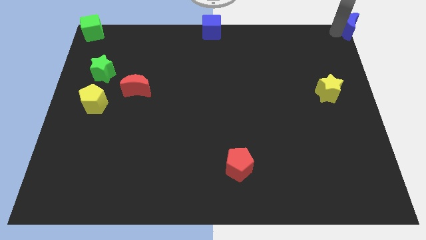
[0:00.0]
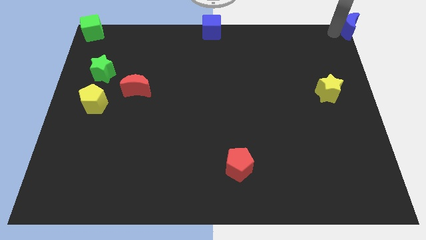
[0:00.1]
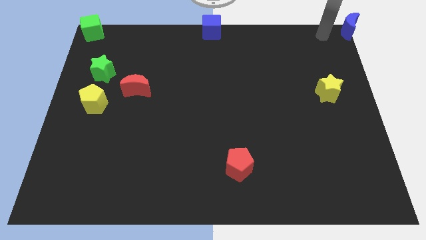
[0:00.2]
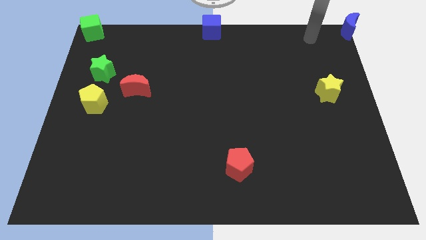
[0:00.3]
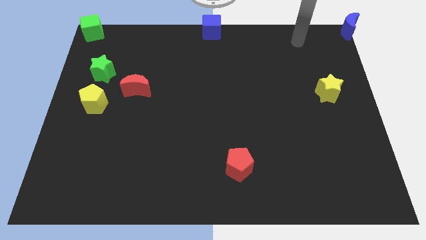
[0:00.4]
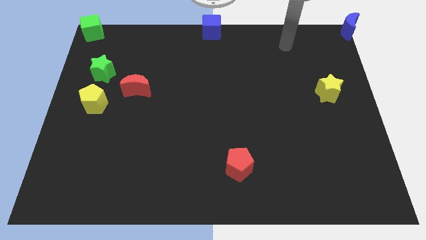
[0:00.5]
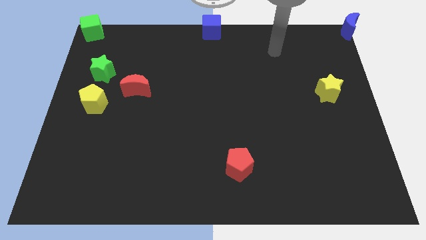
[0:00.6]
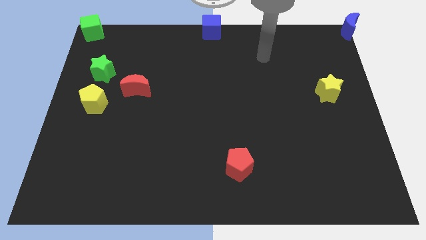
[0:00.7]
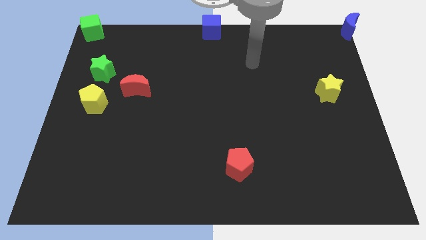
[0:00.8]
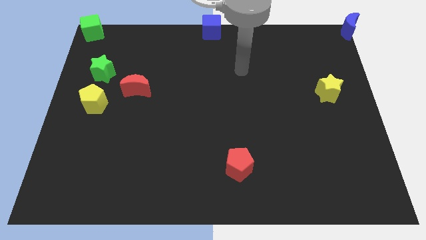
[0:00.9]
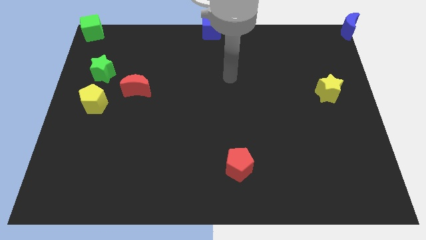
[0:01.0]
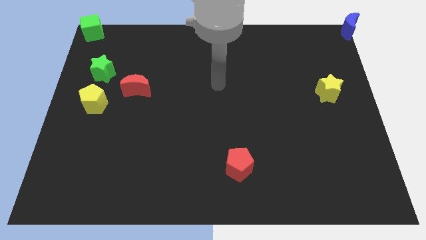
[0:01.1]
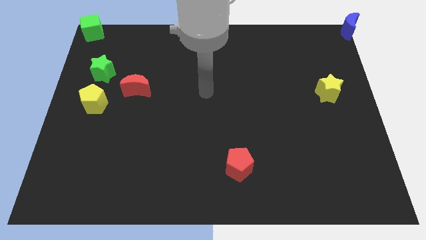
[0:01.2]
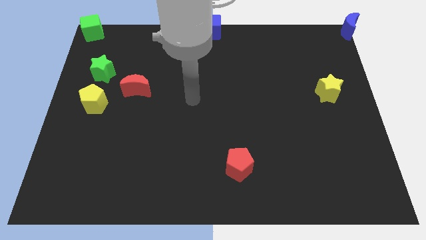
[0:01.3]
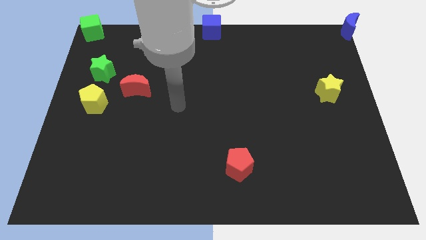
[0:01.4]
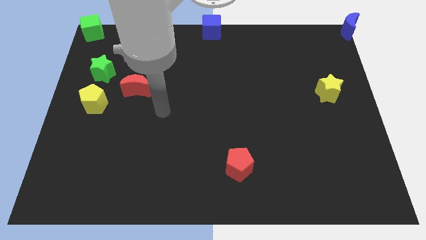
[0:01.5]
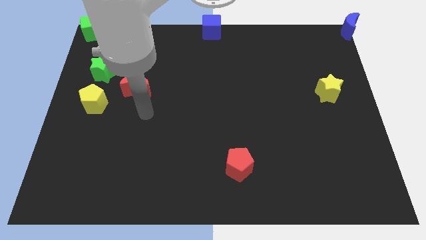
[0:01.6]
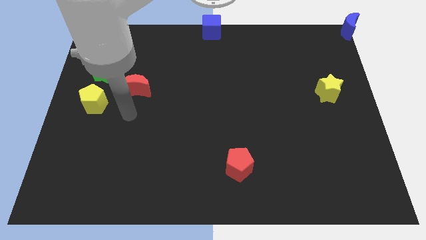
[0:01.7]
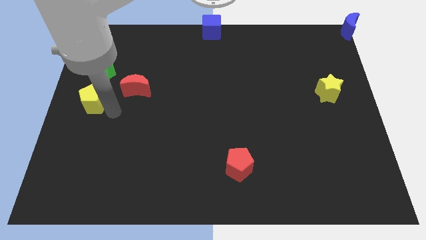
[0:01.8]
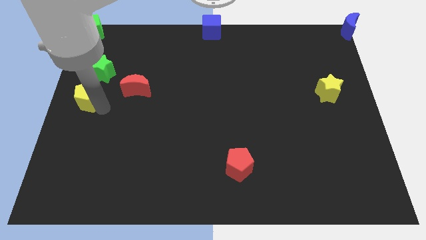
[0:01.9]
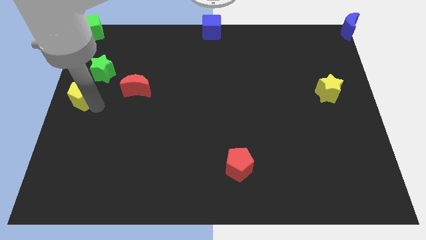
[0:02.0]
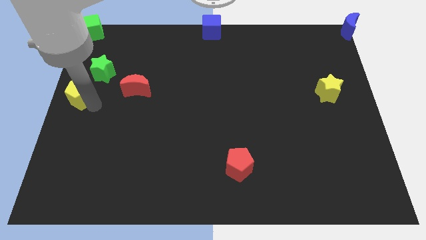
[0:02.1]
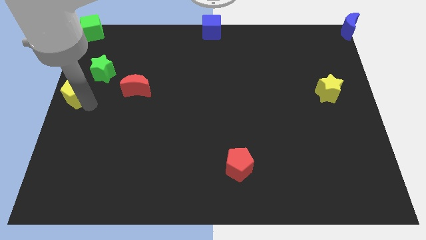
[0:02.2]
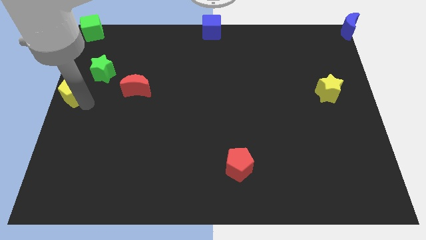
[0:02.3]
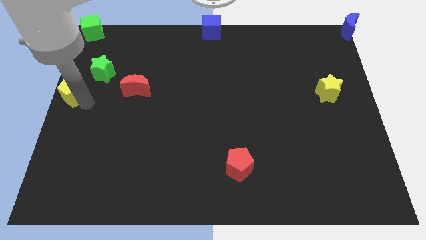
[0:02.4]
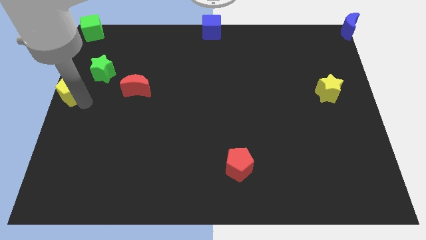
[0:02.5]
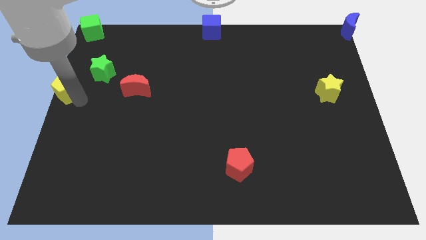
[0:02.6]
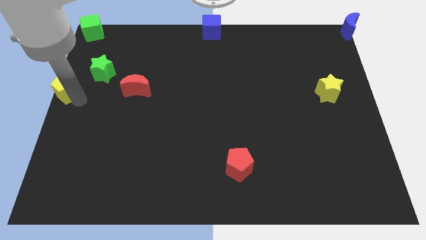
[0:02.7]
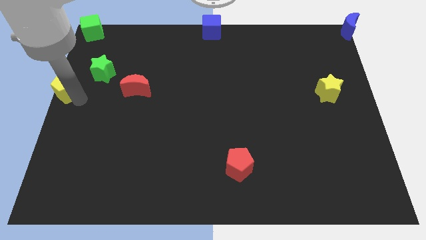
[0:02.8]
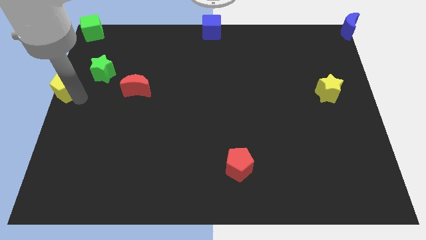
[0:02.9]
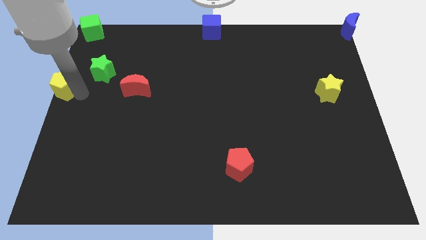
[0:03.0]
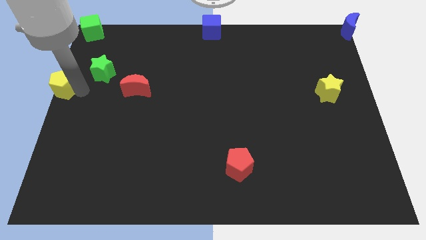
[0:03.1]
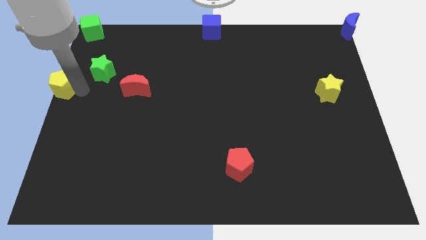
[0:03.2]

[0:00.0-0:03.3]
move the yellow pentagon to the center left of the board

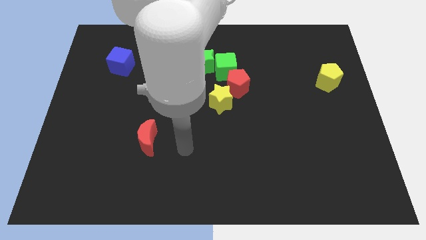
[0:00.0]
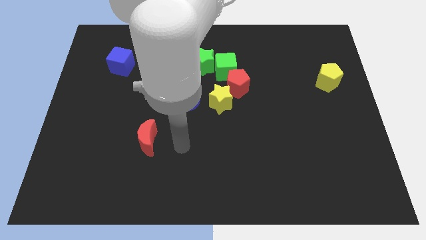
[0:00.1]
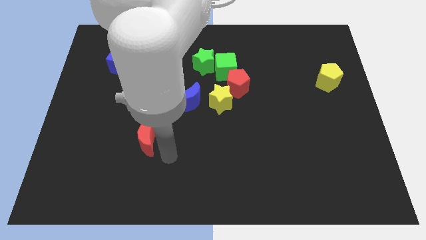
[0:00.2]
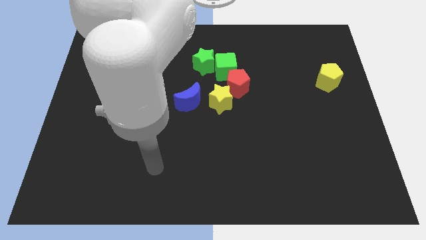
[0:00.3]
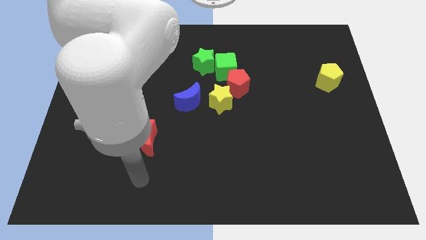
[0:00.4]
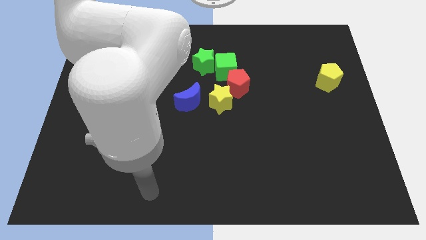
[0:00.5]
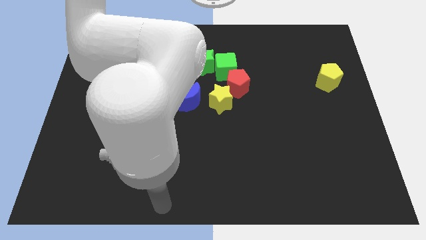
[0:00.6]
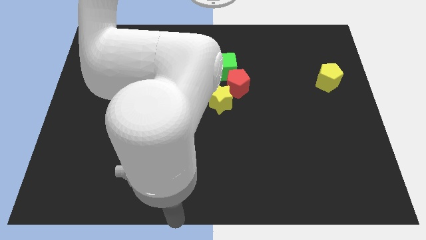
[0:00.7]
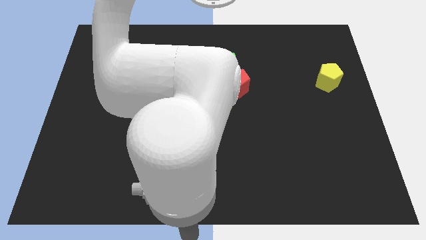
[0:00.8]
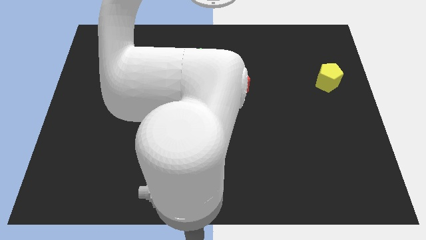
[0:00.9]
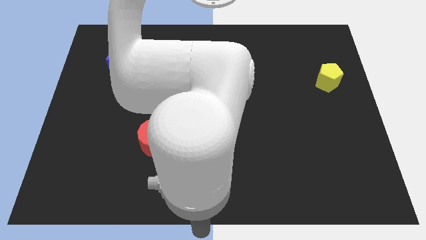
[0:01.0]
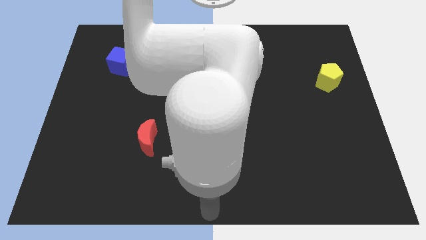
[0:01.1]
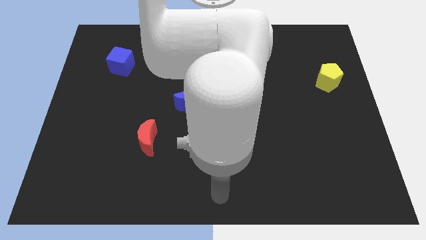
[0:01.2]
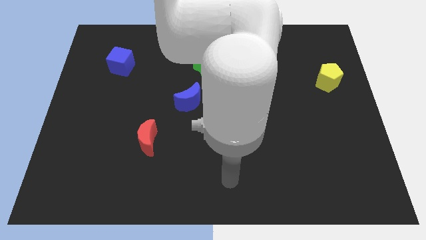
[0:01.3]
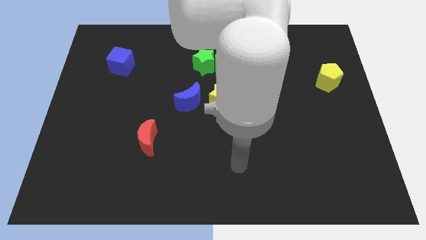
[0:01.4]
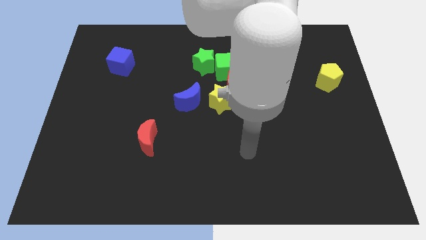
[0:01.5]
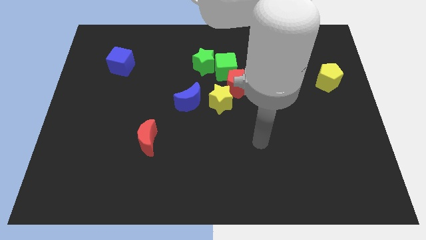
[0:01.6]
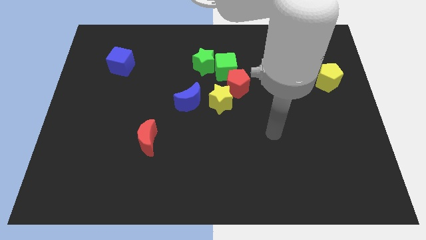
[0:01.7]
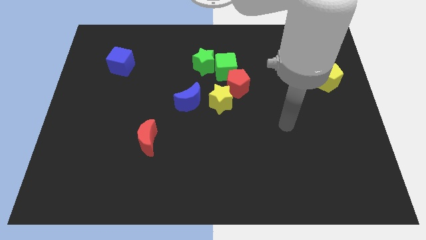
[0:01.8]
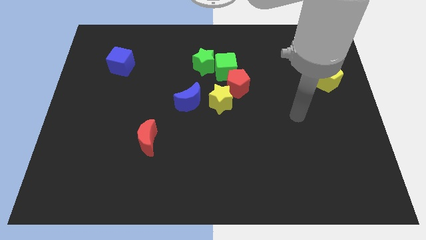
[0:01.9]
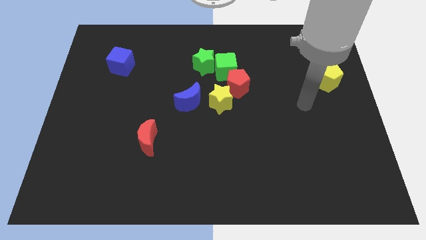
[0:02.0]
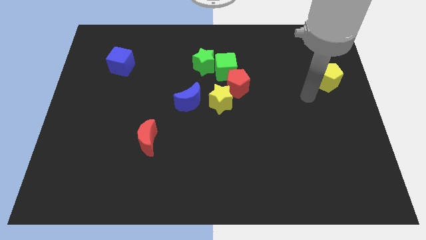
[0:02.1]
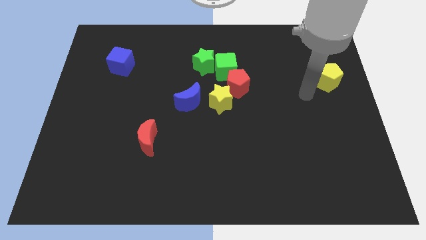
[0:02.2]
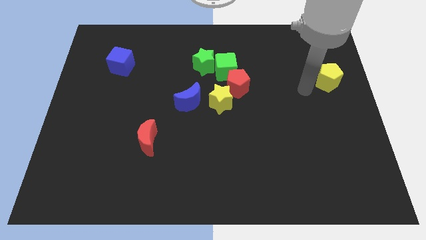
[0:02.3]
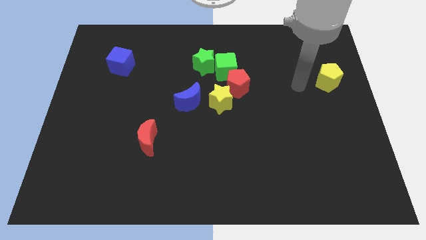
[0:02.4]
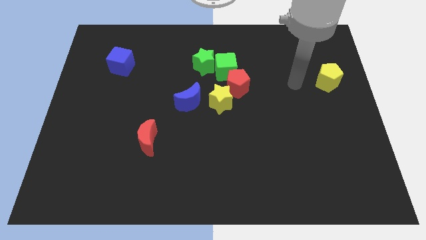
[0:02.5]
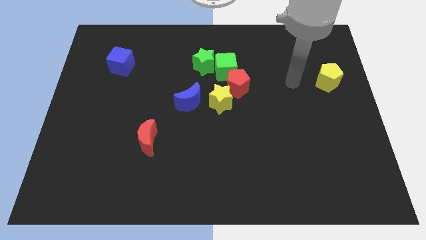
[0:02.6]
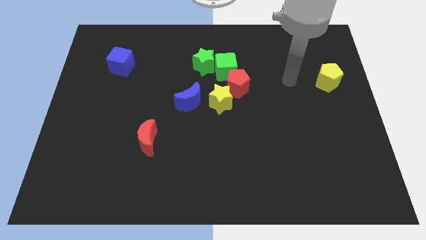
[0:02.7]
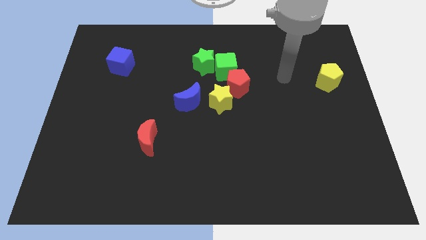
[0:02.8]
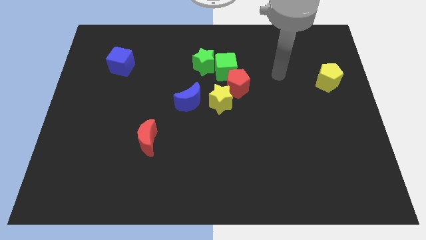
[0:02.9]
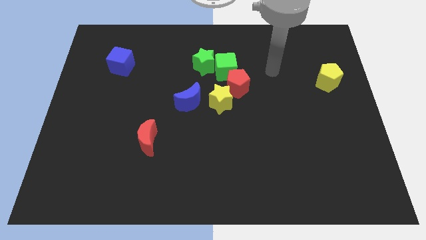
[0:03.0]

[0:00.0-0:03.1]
place move the arm to the right of the green cube

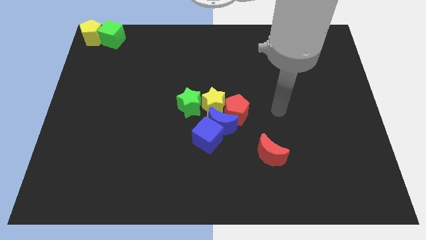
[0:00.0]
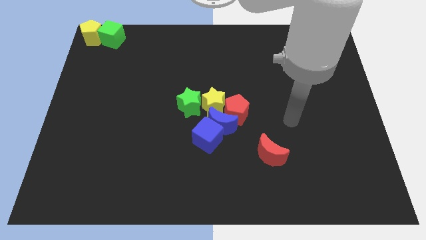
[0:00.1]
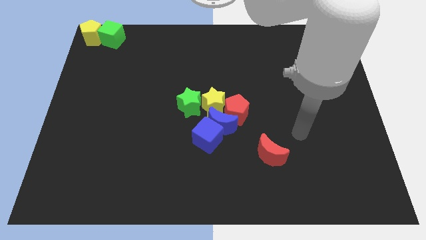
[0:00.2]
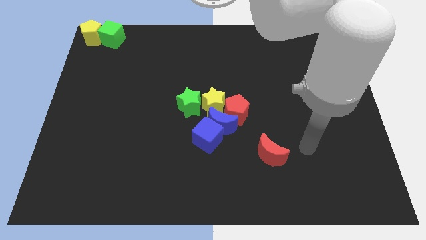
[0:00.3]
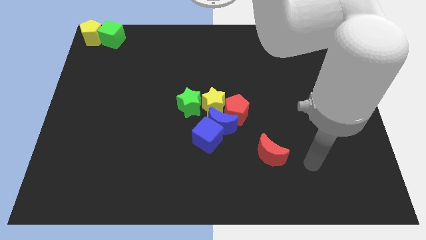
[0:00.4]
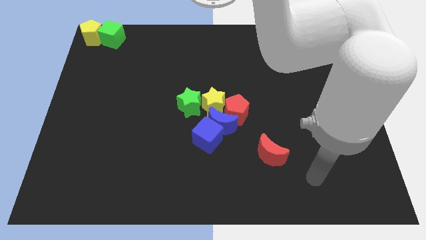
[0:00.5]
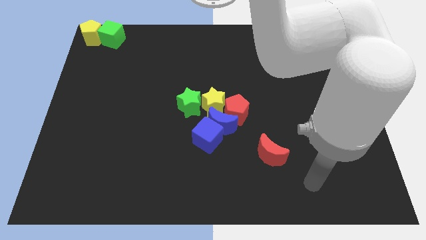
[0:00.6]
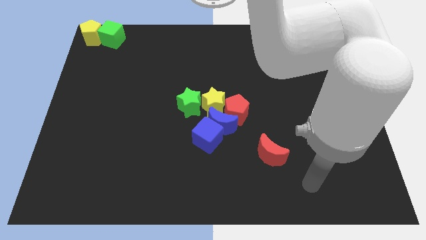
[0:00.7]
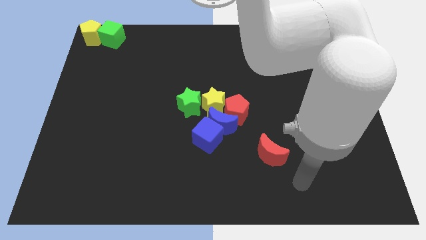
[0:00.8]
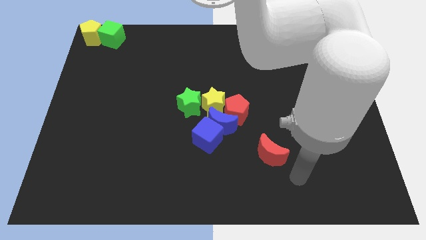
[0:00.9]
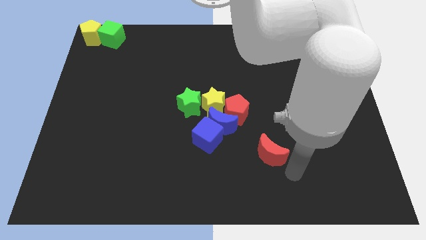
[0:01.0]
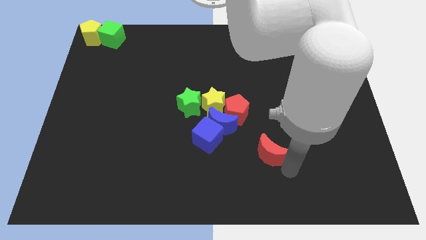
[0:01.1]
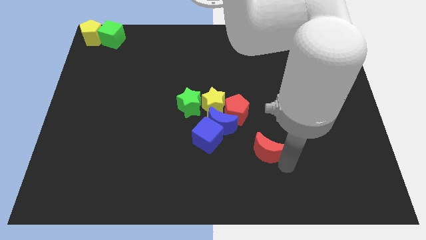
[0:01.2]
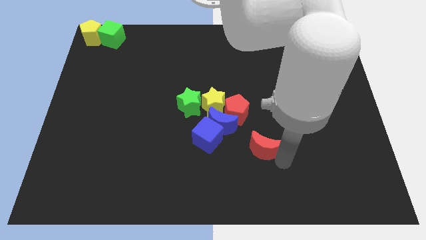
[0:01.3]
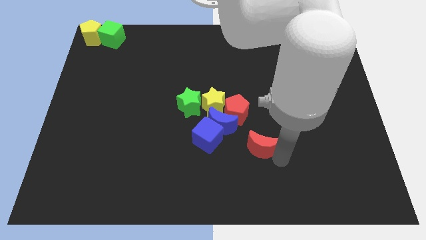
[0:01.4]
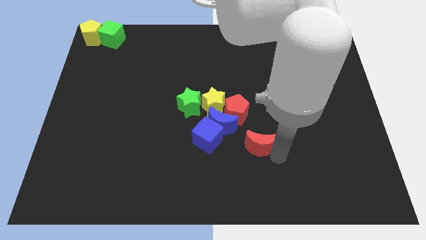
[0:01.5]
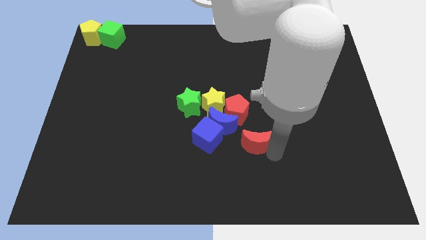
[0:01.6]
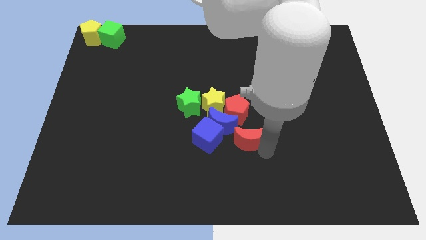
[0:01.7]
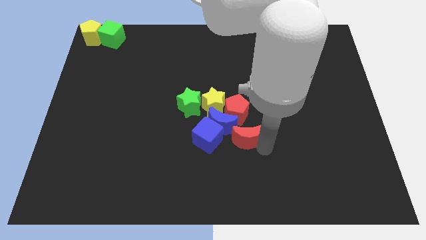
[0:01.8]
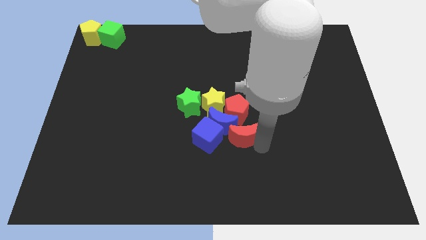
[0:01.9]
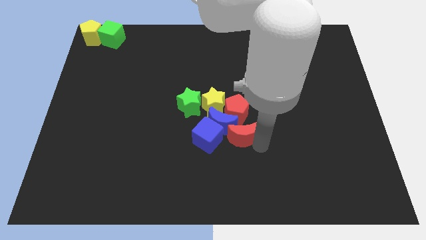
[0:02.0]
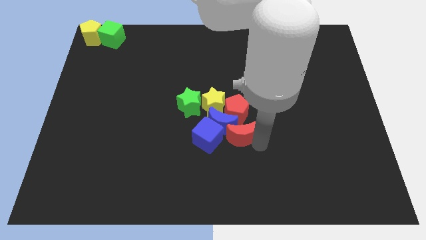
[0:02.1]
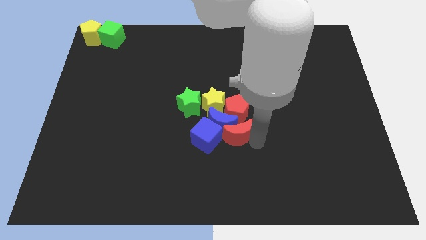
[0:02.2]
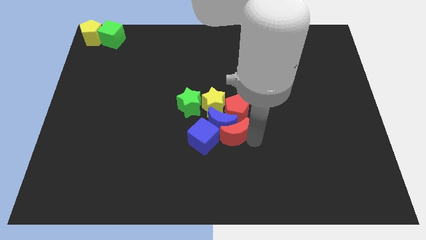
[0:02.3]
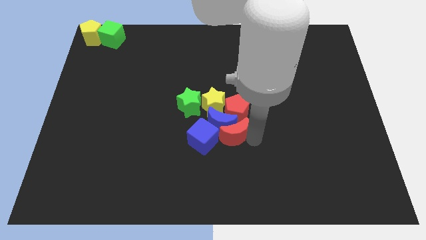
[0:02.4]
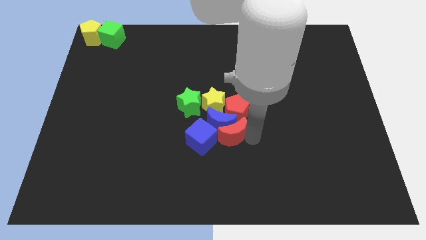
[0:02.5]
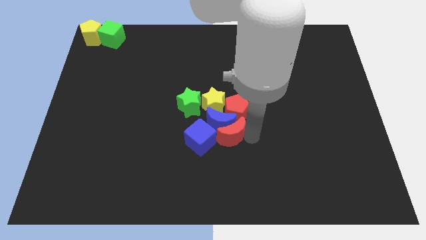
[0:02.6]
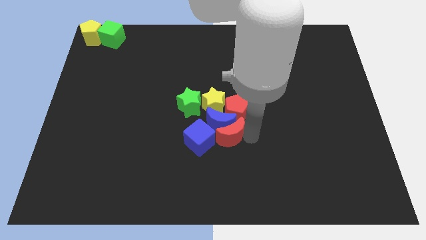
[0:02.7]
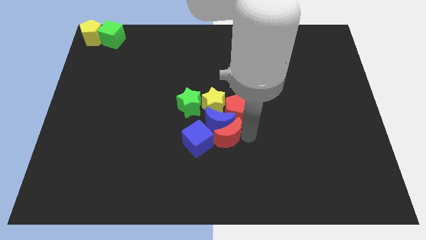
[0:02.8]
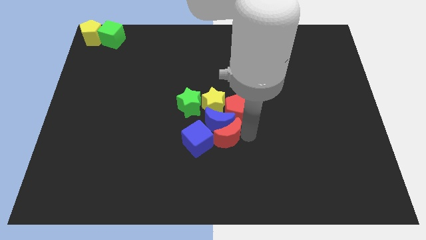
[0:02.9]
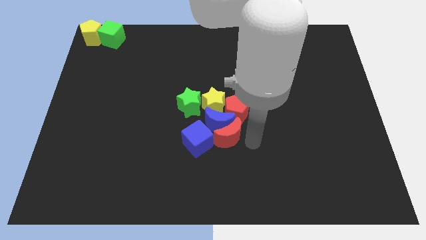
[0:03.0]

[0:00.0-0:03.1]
place the red moon blue cube into the group of blocks
